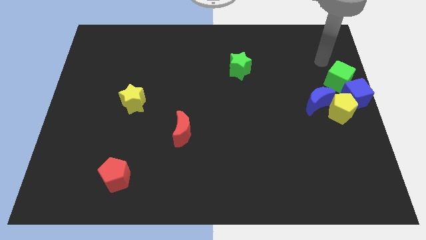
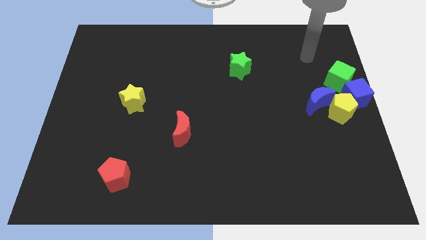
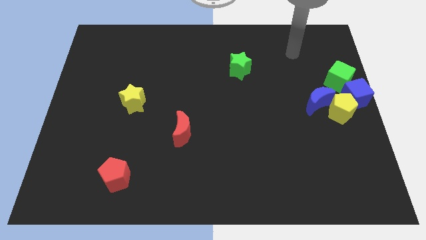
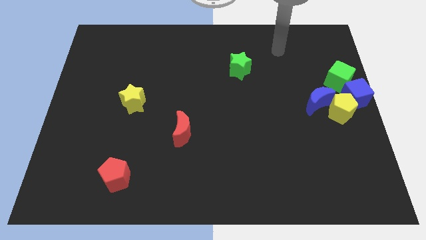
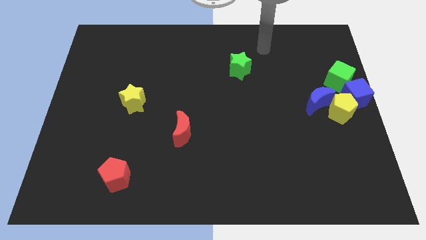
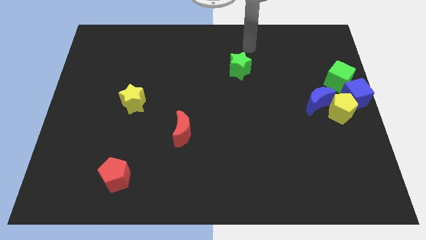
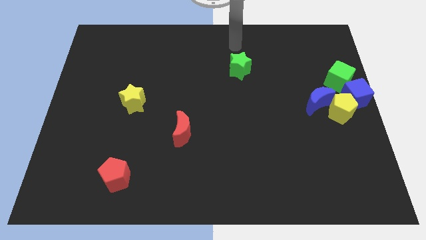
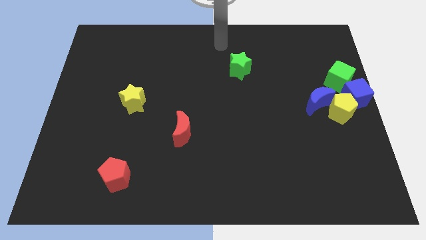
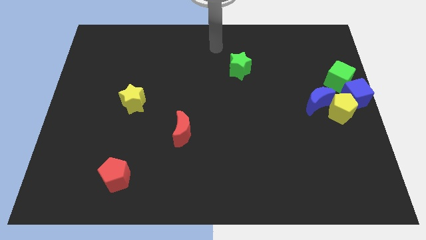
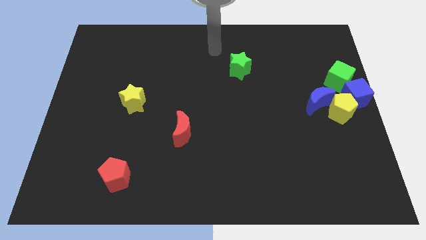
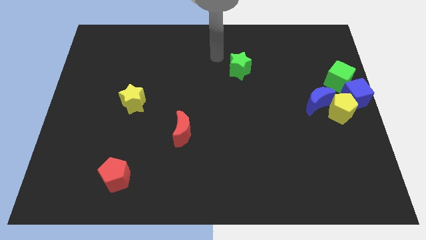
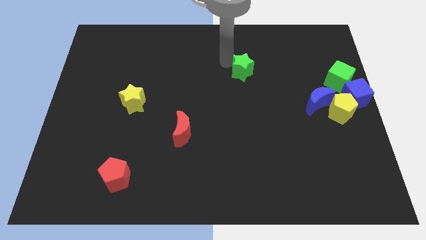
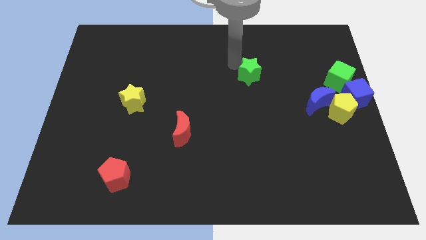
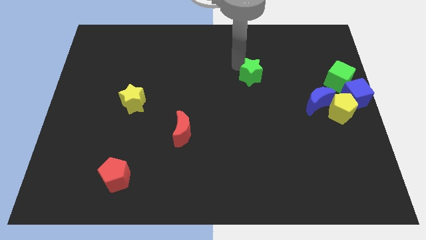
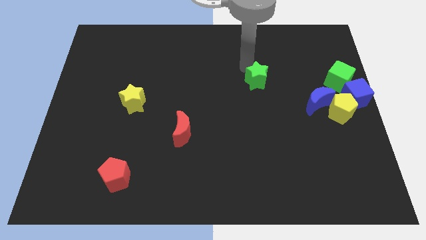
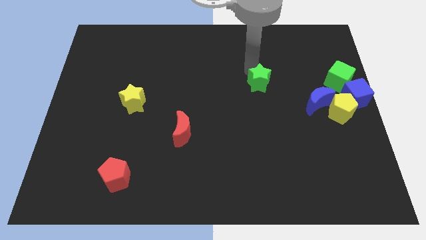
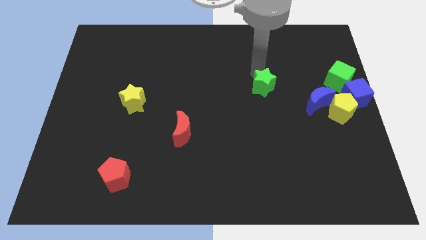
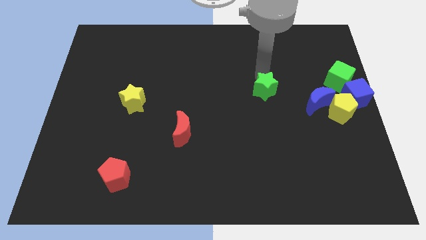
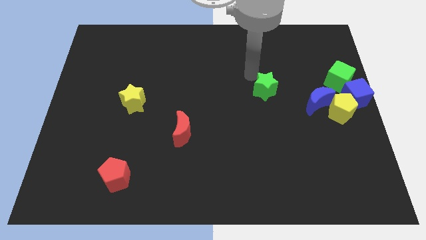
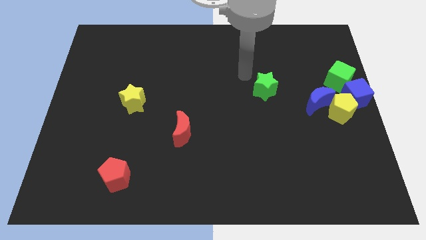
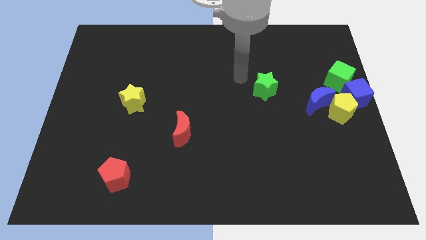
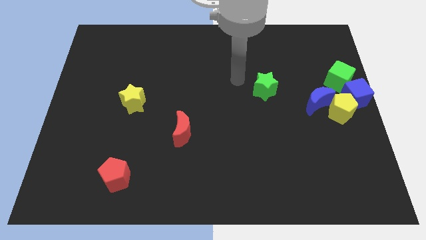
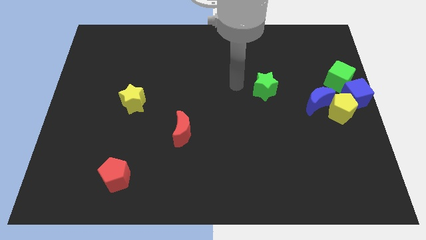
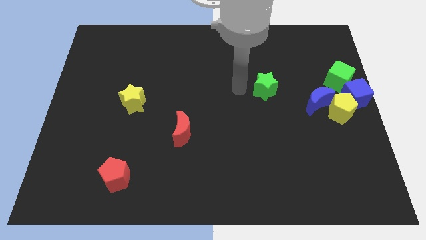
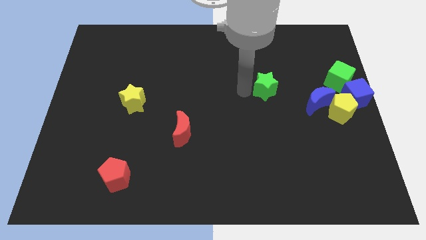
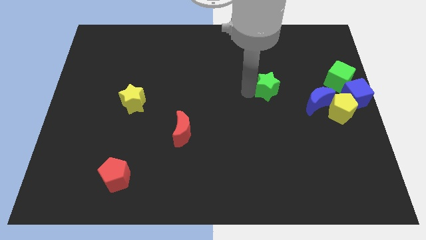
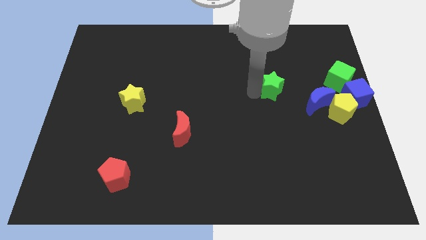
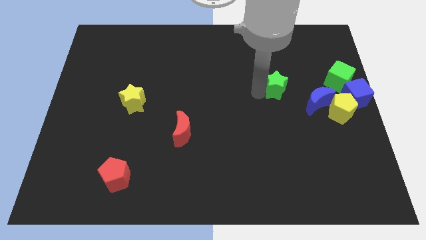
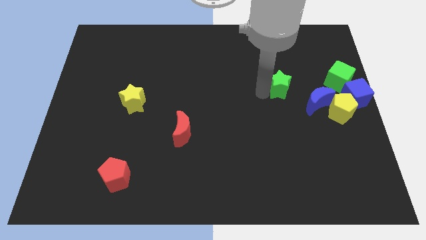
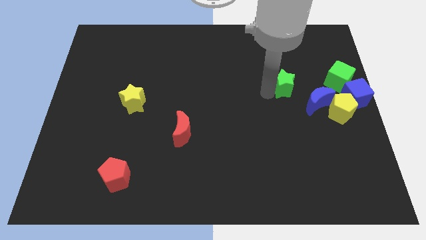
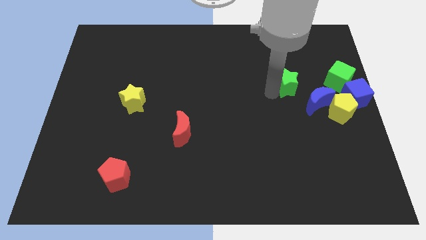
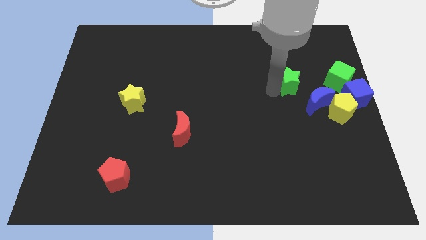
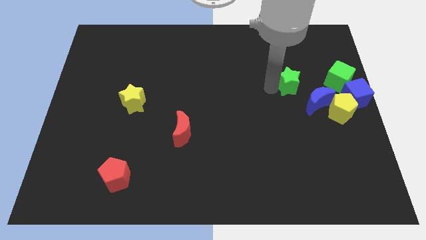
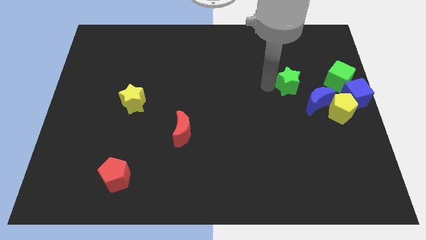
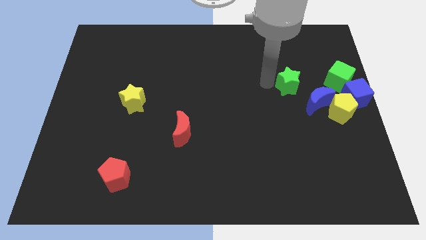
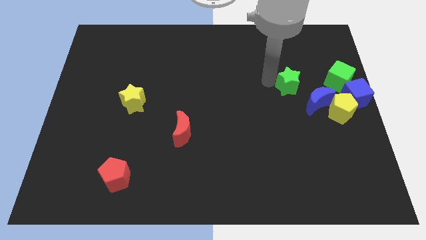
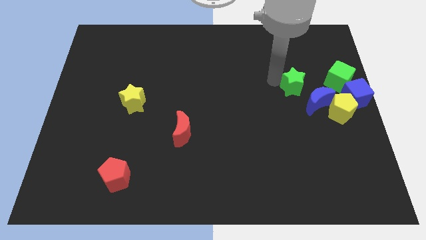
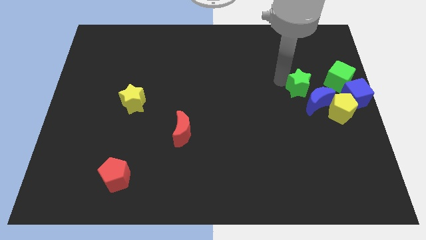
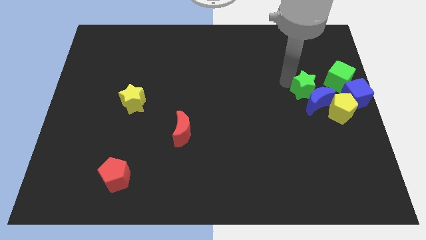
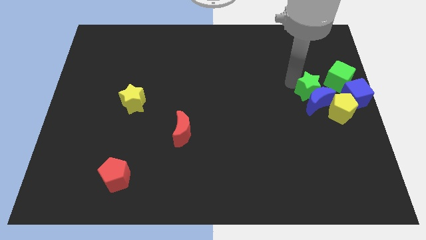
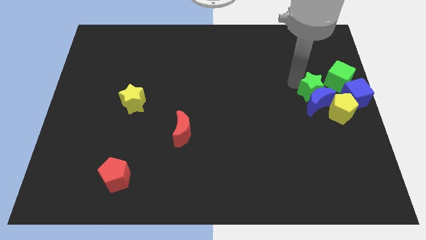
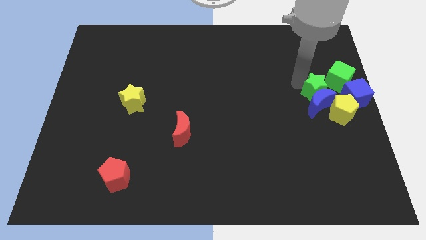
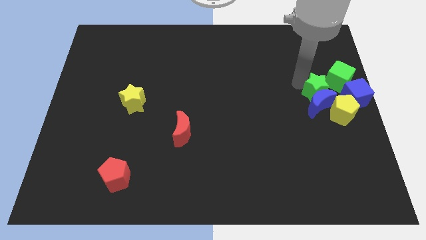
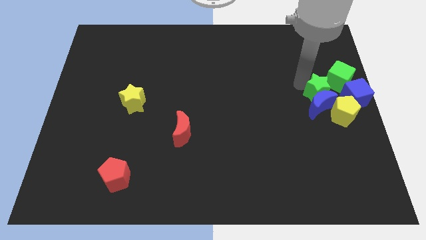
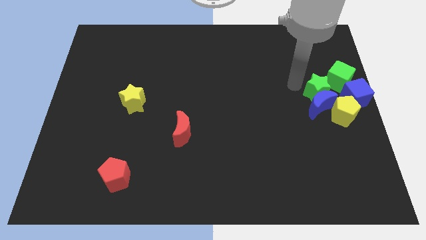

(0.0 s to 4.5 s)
push the green star into the blue crescent

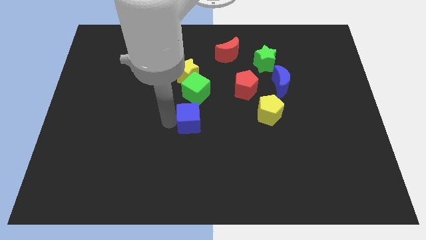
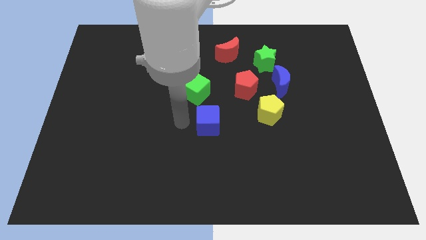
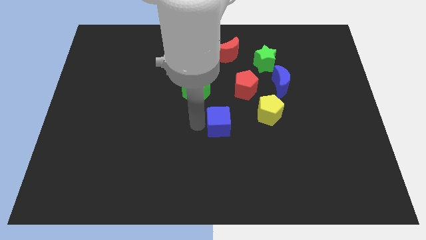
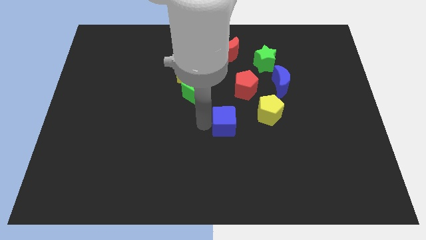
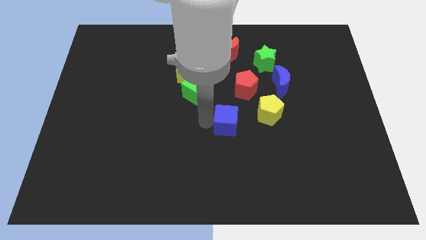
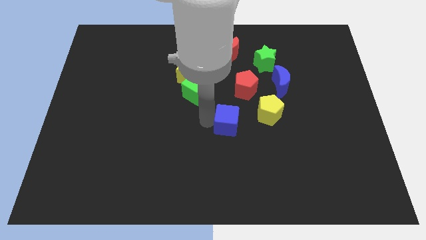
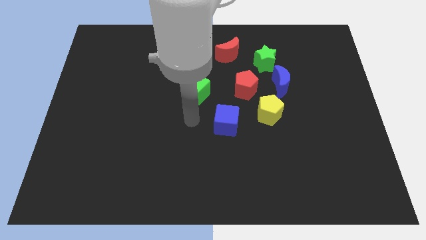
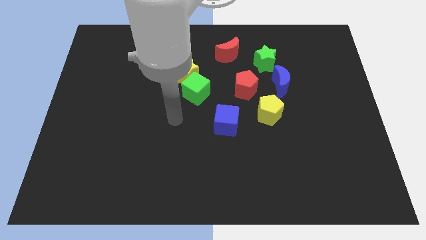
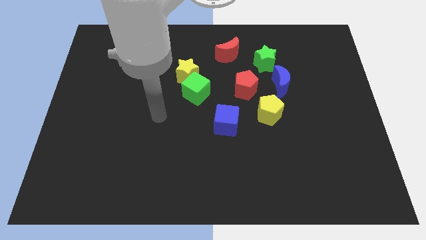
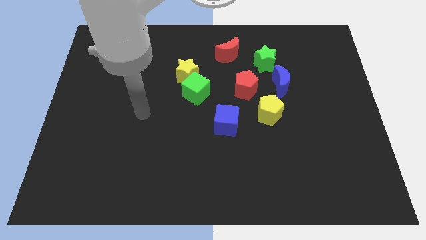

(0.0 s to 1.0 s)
move the blue cube towards the yellow pentagon

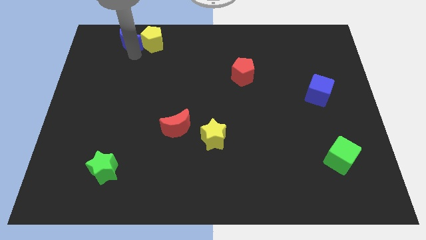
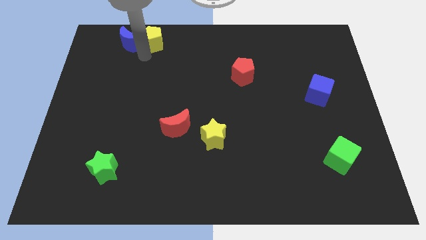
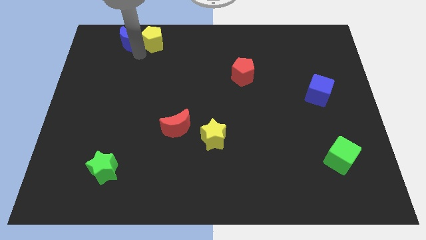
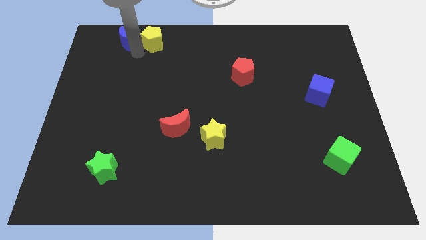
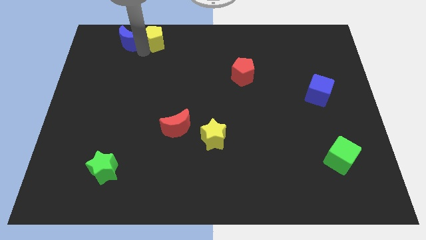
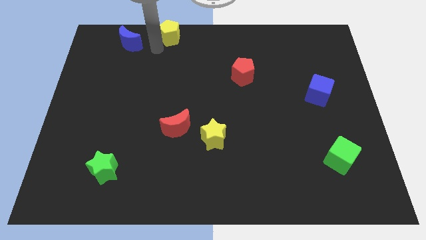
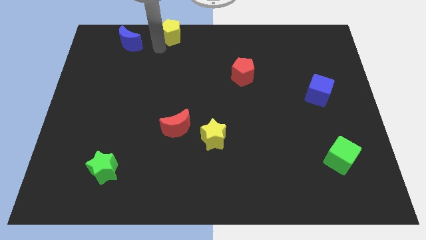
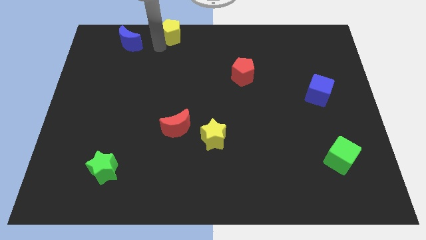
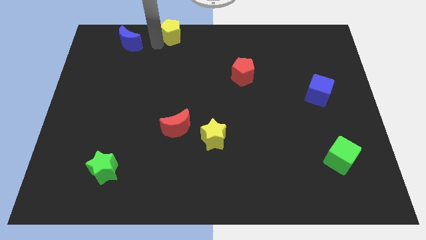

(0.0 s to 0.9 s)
separate the blue crescent and yellow pentagon

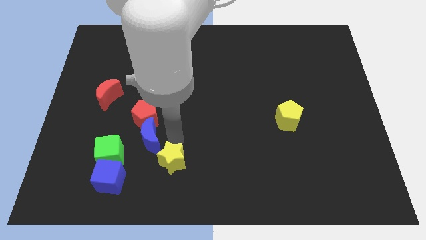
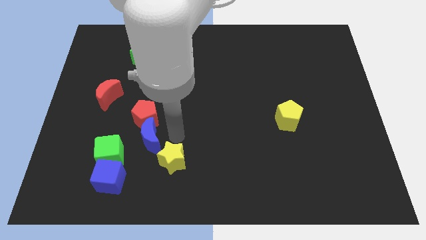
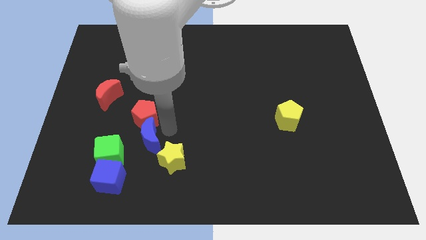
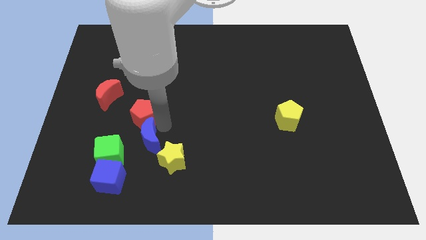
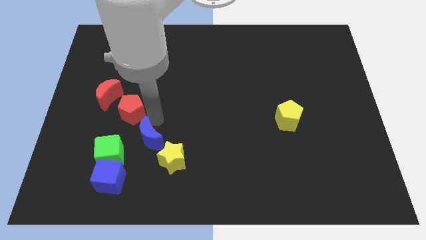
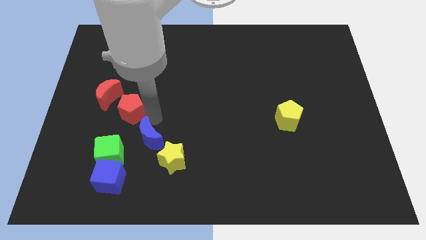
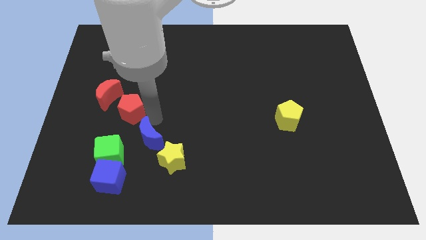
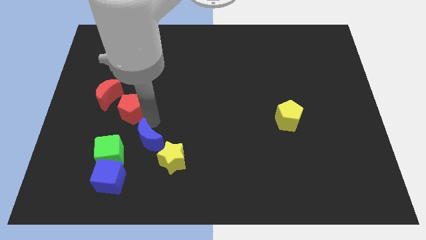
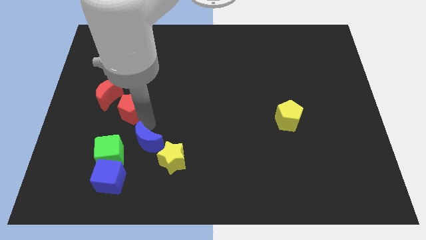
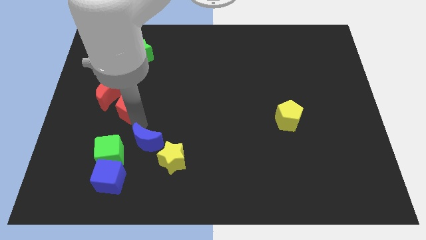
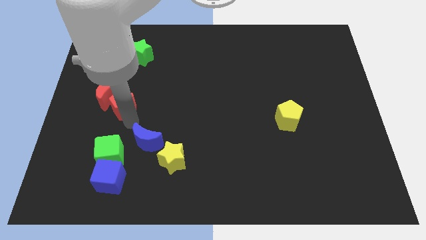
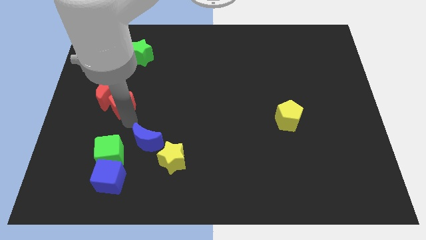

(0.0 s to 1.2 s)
separate the red pentagon and the blue moon

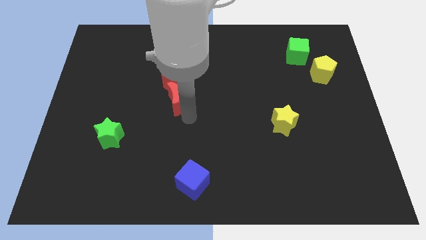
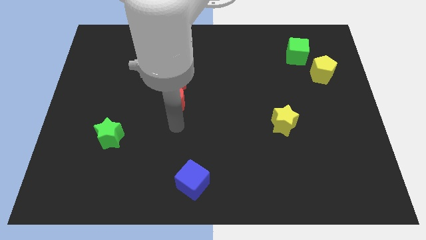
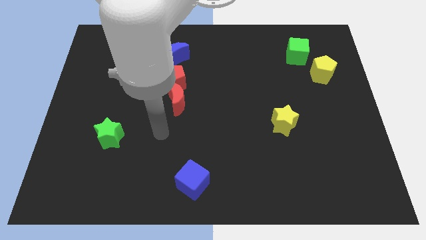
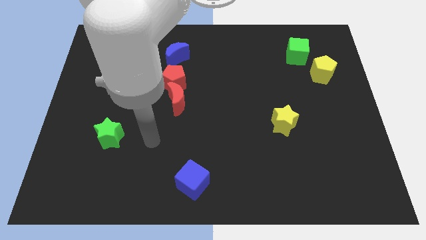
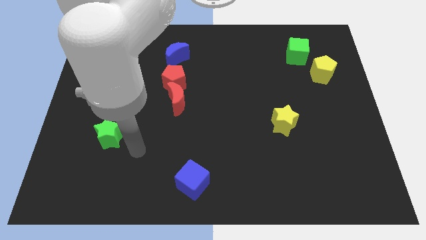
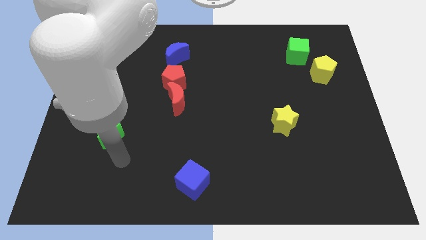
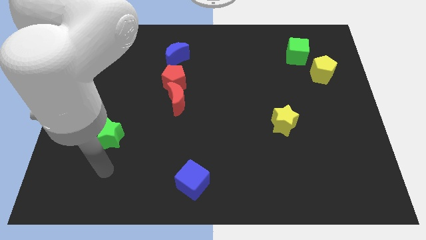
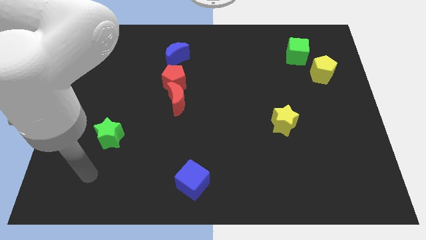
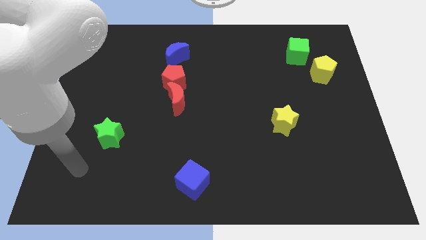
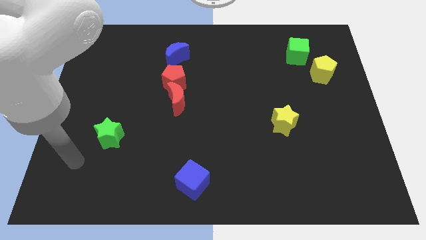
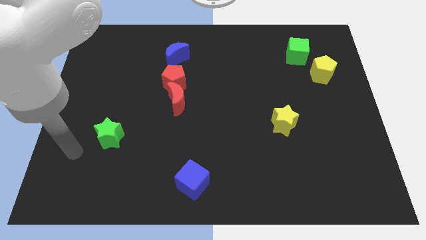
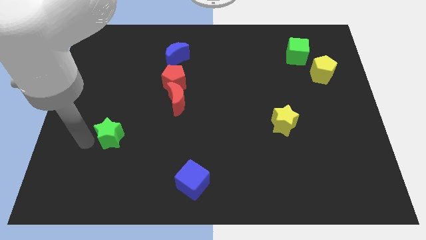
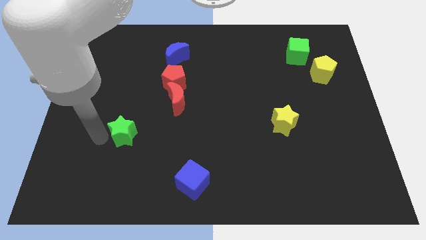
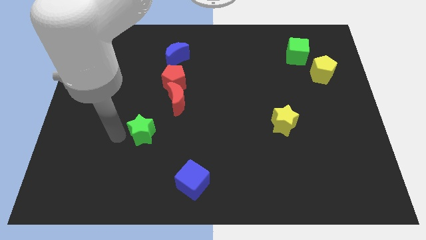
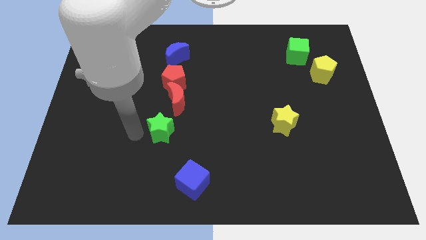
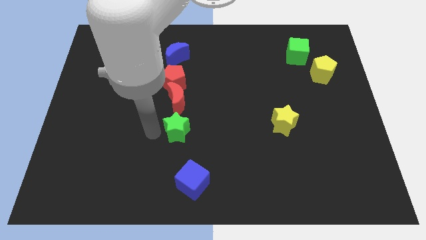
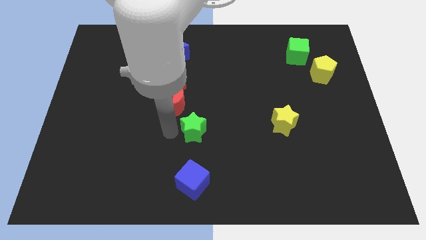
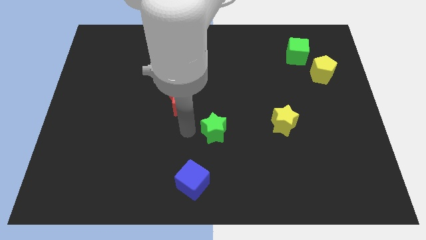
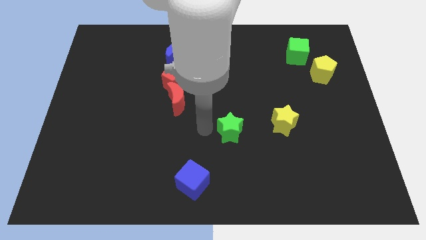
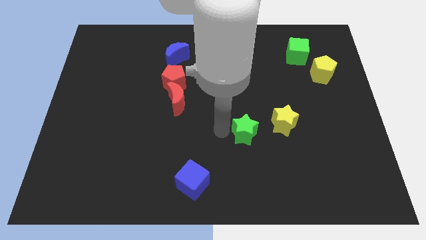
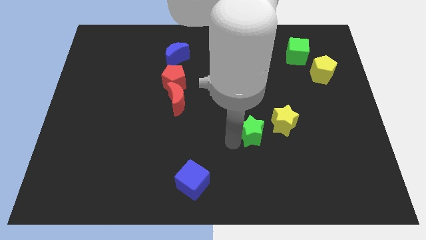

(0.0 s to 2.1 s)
move green star towards yellow star
